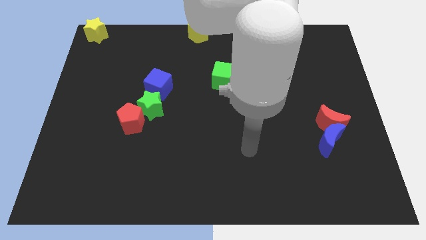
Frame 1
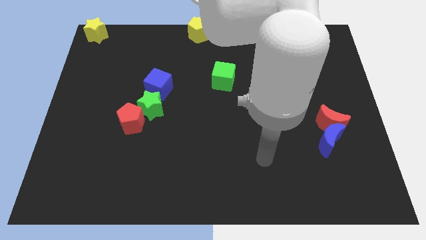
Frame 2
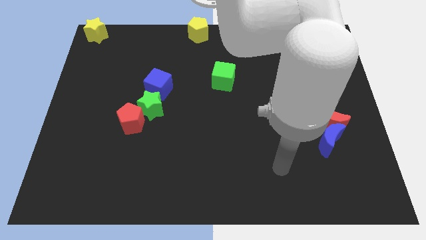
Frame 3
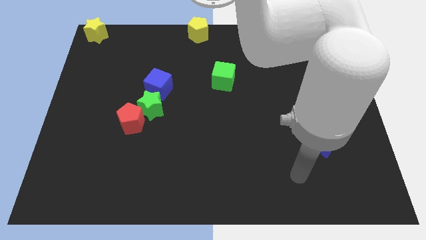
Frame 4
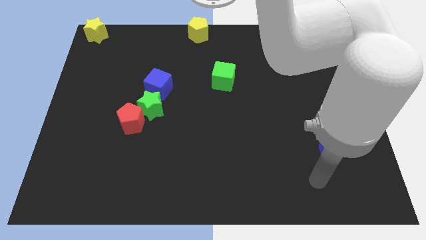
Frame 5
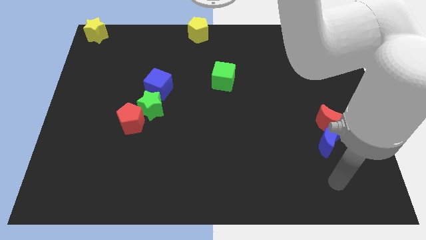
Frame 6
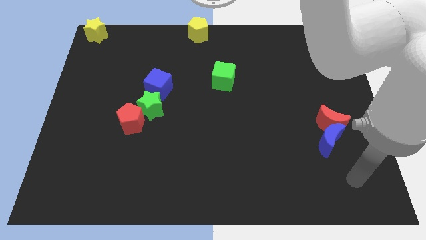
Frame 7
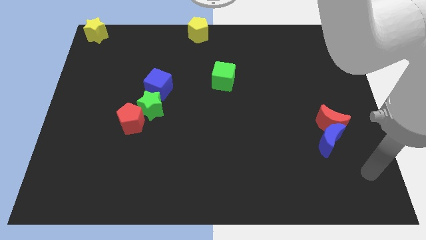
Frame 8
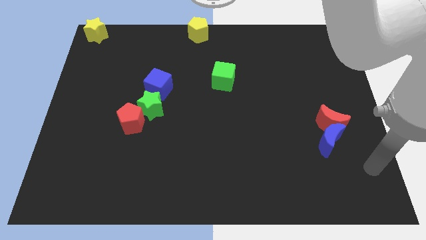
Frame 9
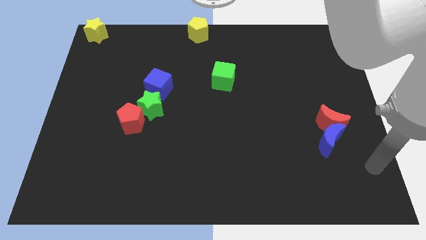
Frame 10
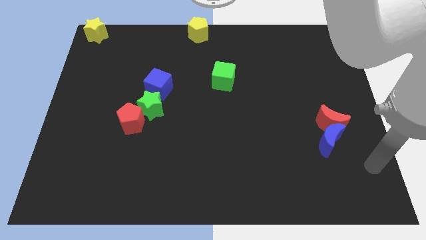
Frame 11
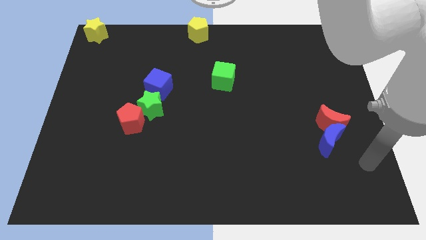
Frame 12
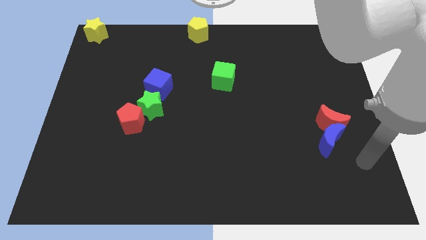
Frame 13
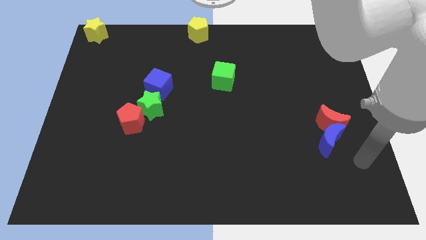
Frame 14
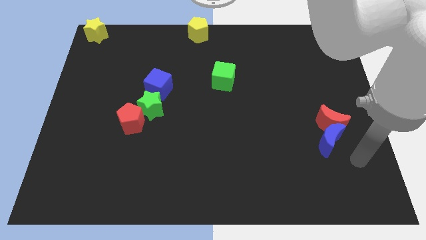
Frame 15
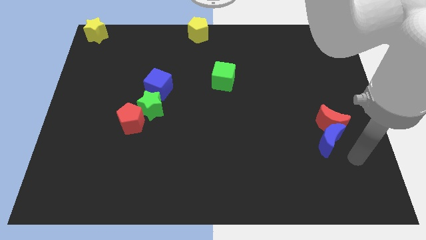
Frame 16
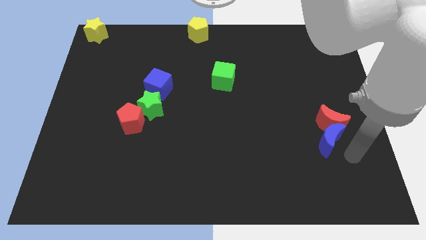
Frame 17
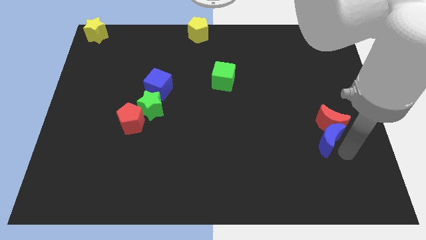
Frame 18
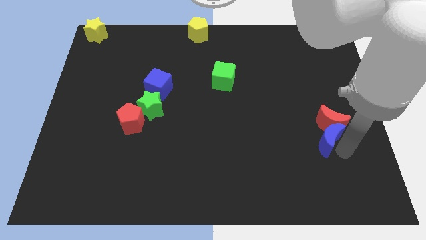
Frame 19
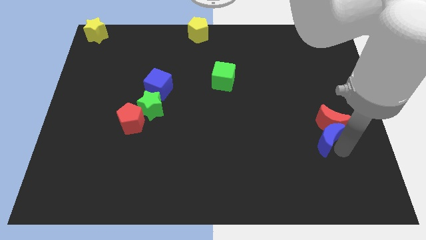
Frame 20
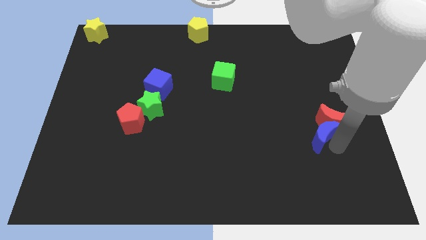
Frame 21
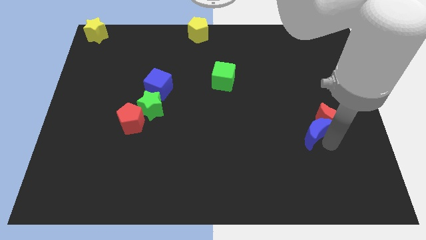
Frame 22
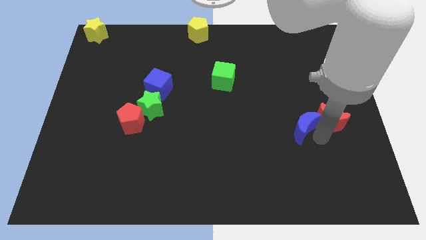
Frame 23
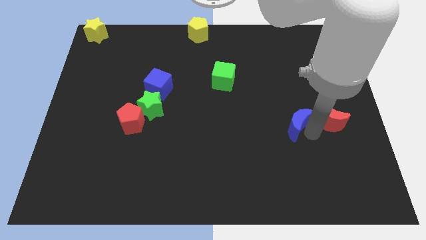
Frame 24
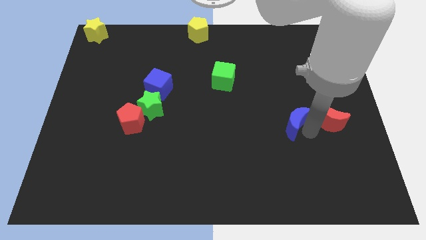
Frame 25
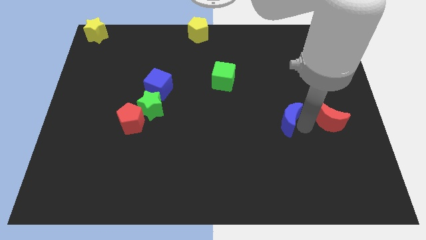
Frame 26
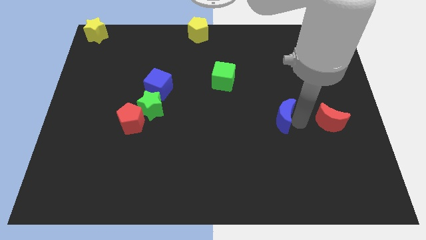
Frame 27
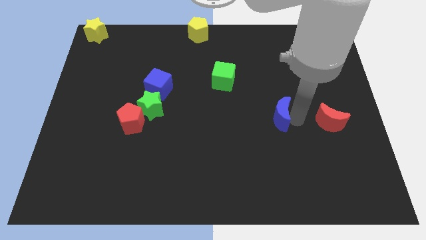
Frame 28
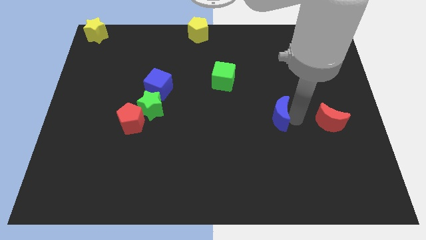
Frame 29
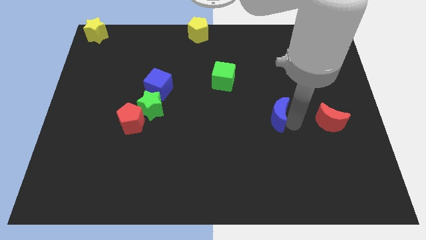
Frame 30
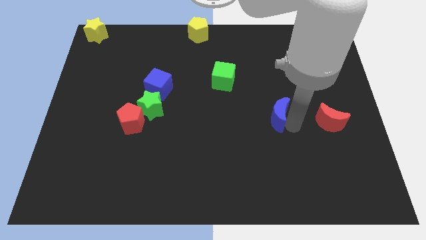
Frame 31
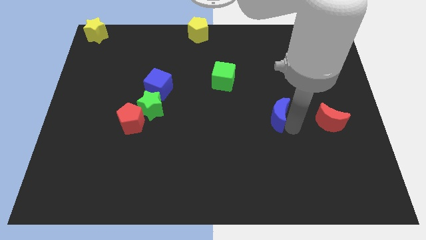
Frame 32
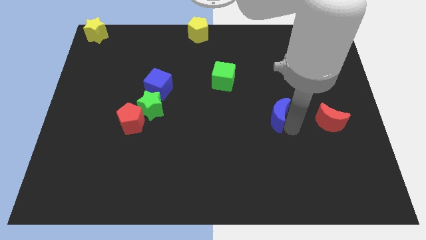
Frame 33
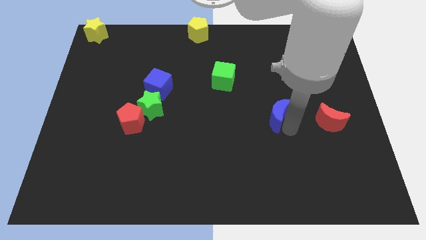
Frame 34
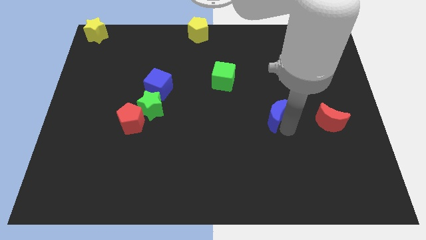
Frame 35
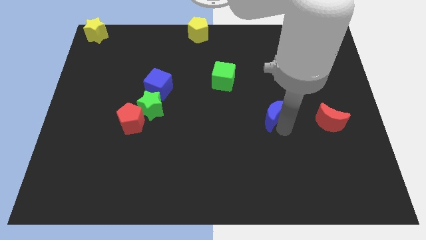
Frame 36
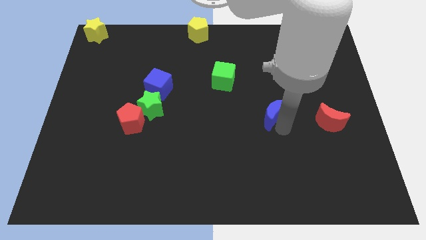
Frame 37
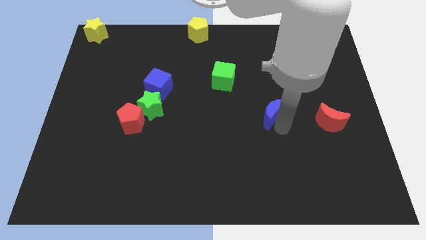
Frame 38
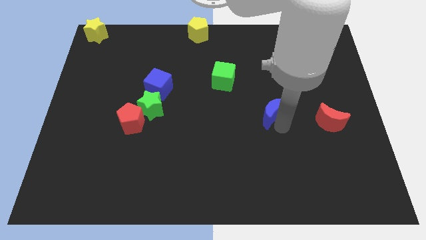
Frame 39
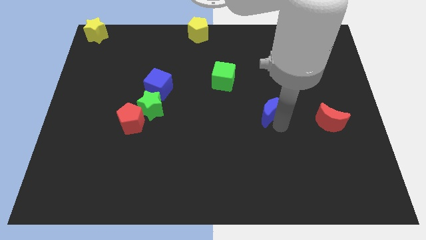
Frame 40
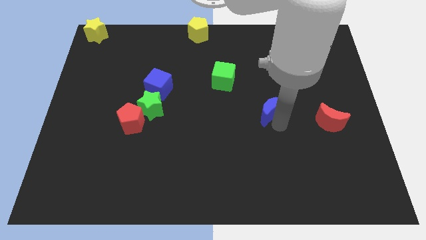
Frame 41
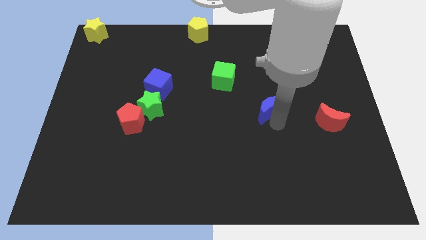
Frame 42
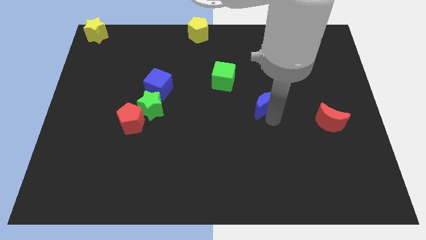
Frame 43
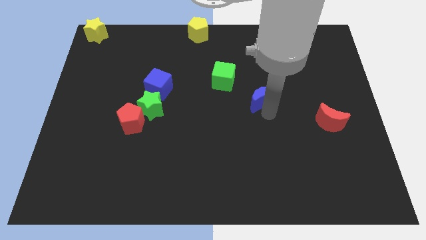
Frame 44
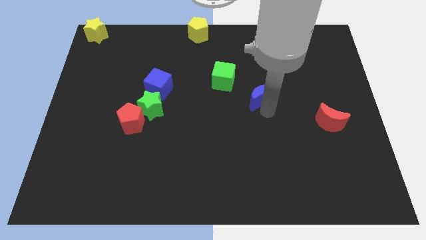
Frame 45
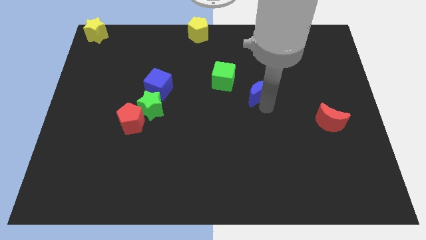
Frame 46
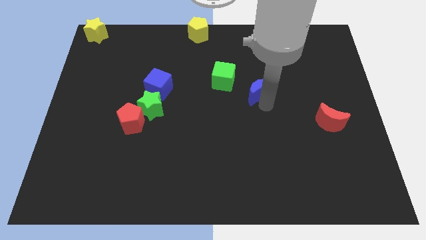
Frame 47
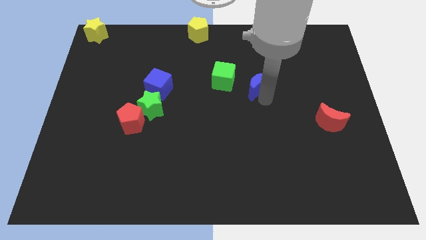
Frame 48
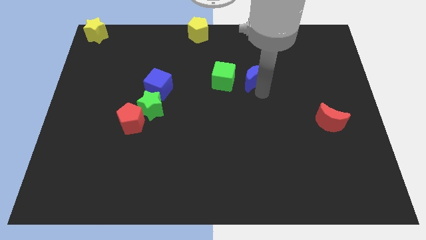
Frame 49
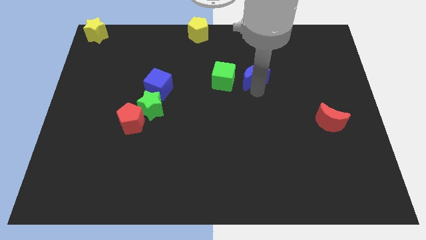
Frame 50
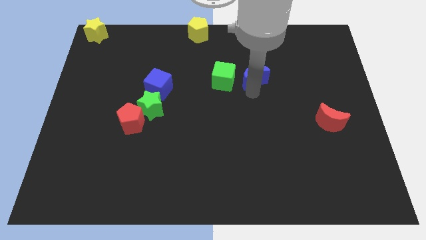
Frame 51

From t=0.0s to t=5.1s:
push the blue moon towards the top center of the board

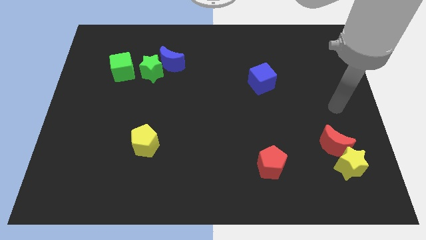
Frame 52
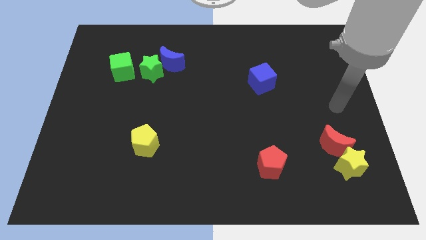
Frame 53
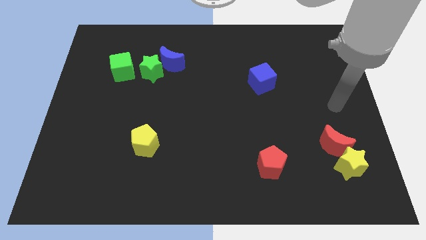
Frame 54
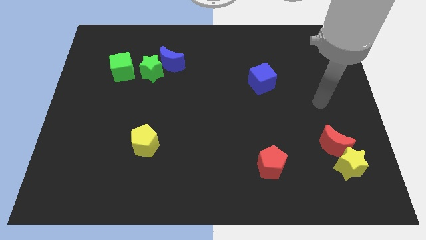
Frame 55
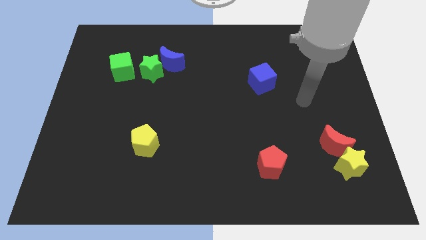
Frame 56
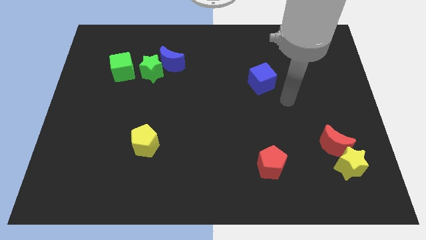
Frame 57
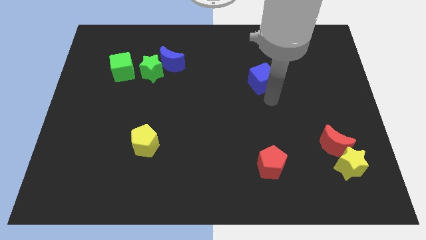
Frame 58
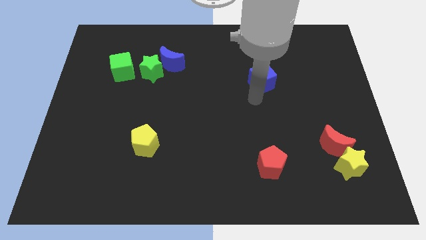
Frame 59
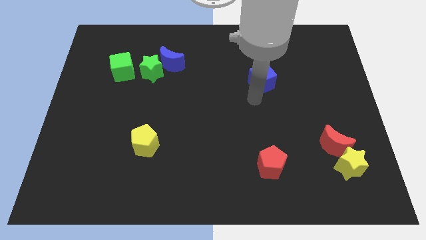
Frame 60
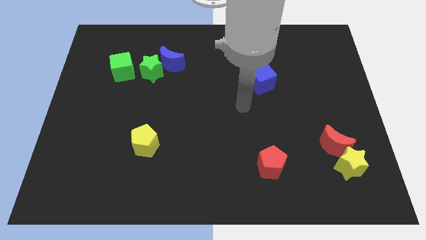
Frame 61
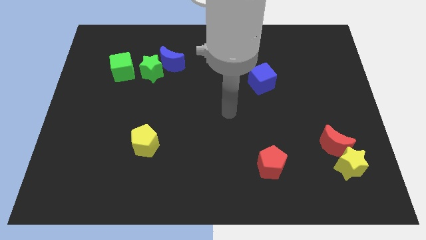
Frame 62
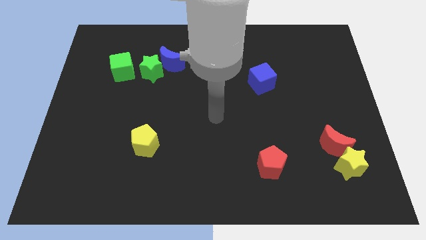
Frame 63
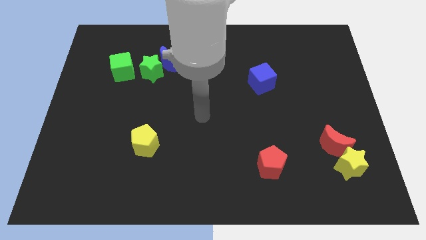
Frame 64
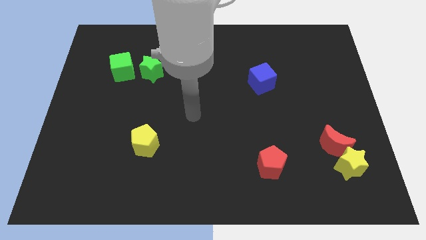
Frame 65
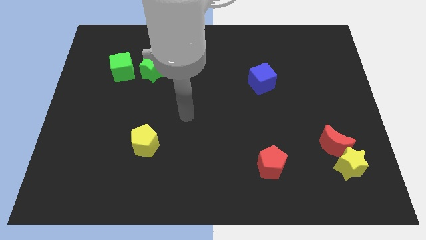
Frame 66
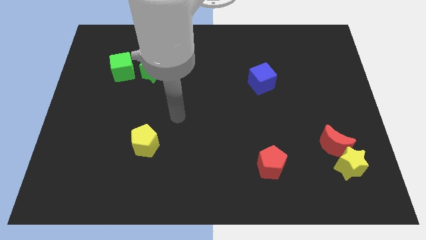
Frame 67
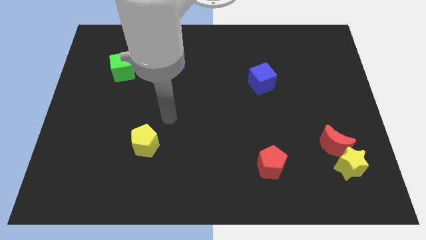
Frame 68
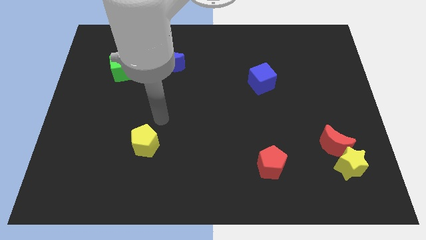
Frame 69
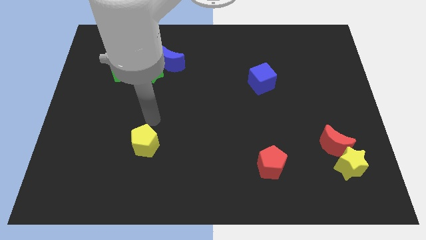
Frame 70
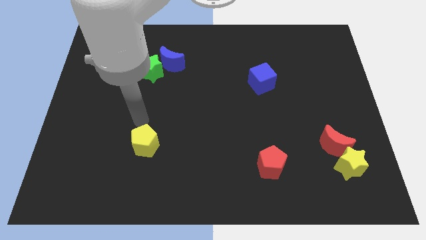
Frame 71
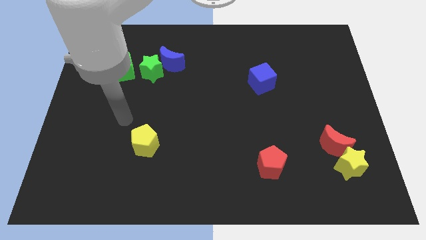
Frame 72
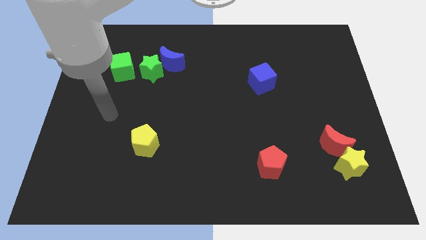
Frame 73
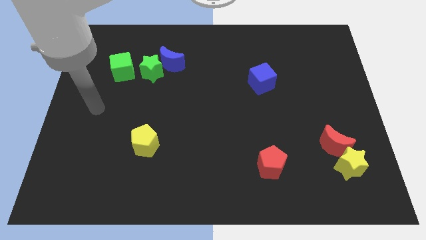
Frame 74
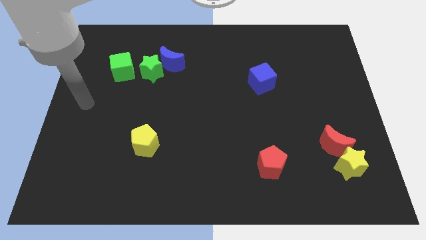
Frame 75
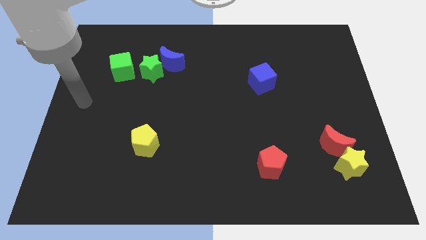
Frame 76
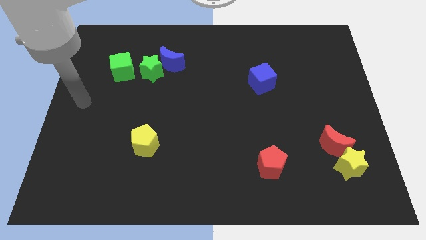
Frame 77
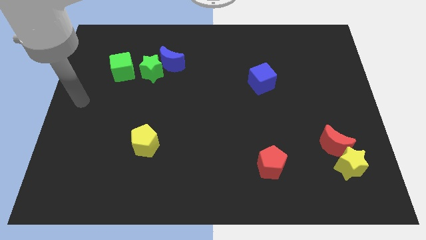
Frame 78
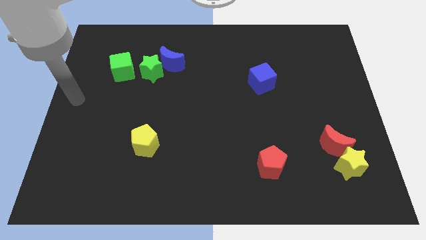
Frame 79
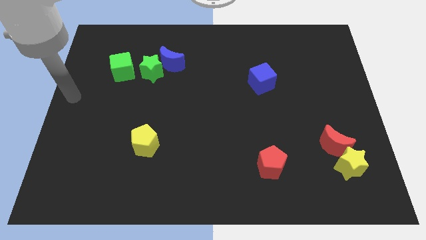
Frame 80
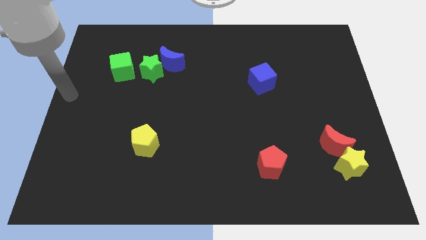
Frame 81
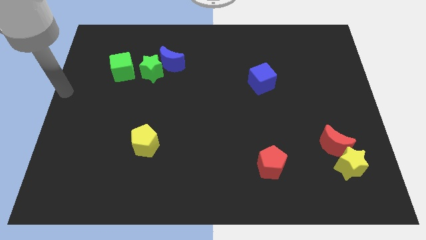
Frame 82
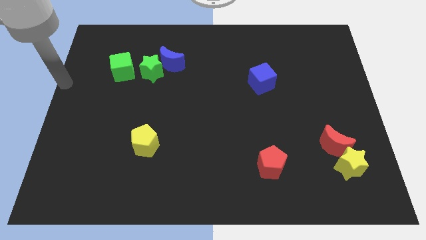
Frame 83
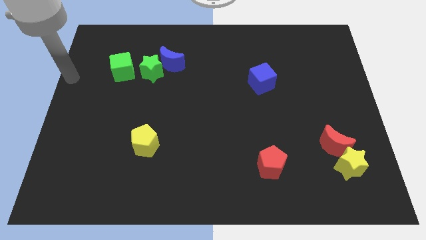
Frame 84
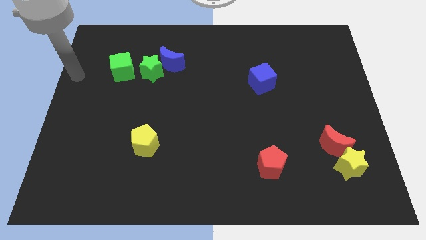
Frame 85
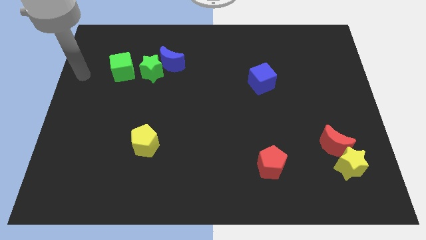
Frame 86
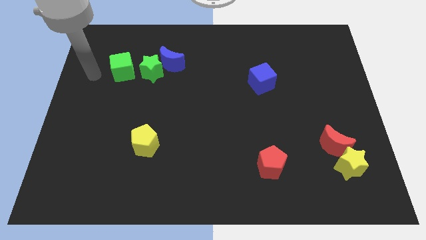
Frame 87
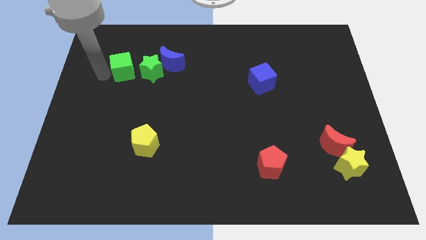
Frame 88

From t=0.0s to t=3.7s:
move your arm towards the green cube

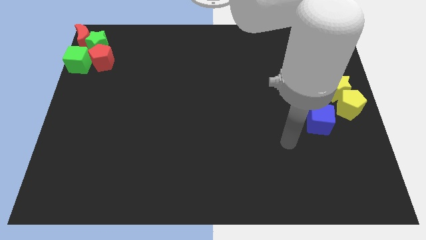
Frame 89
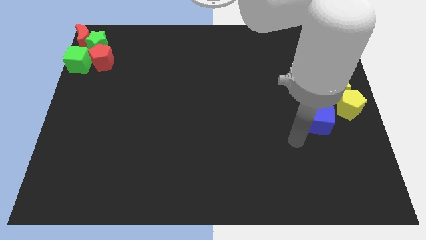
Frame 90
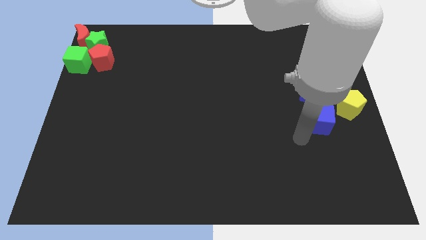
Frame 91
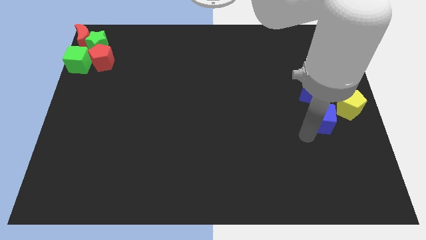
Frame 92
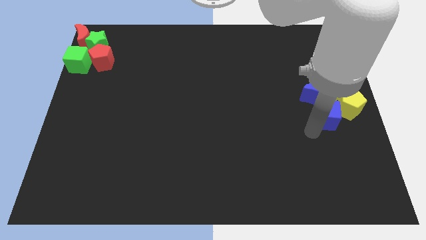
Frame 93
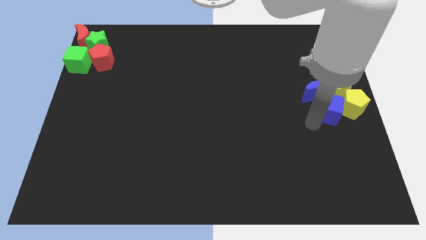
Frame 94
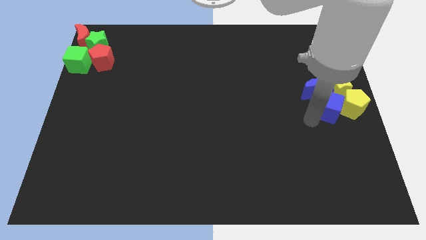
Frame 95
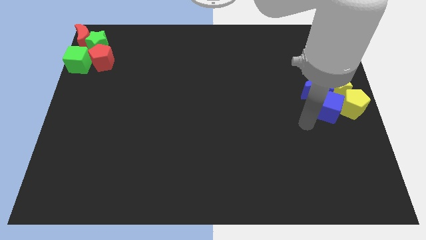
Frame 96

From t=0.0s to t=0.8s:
push the blue cube close to the group of blocks
